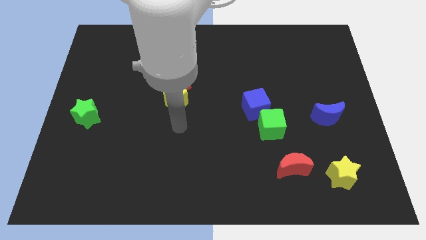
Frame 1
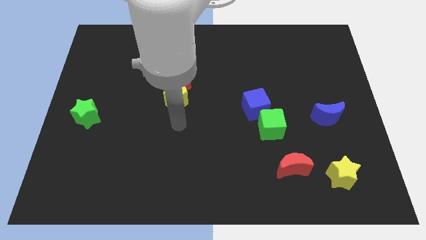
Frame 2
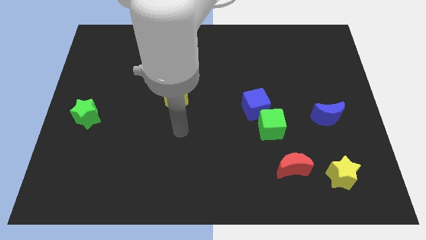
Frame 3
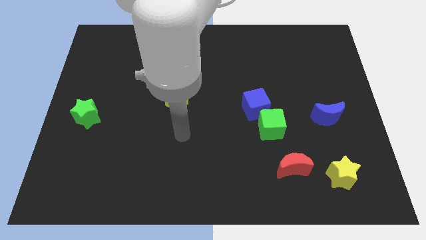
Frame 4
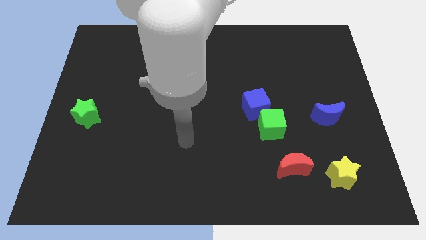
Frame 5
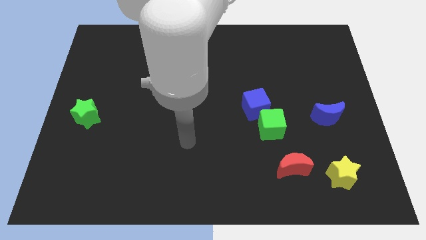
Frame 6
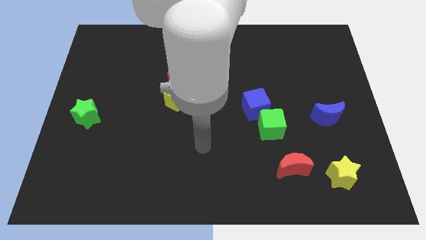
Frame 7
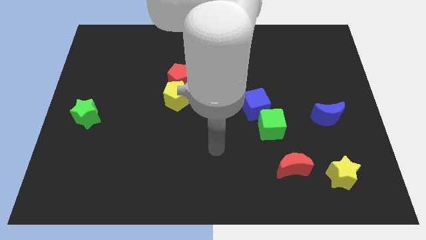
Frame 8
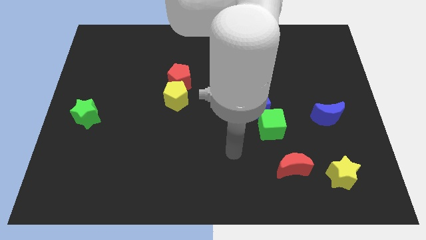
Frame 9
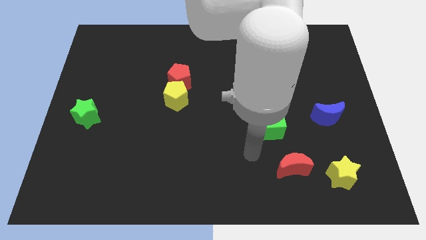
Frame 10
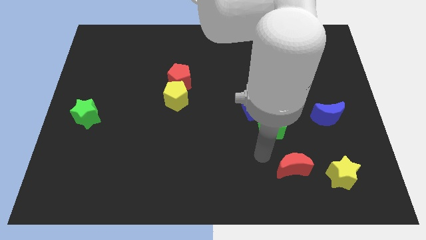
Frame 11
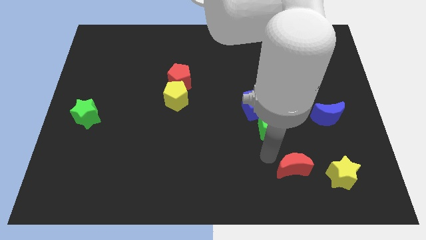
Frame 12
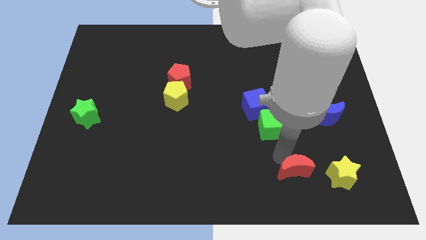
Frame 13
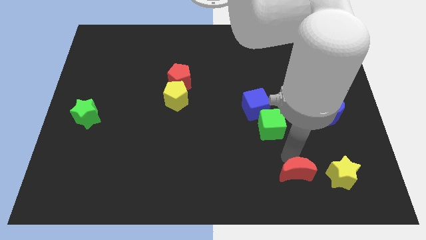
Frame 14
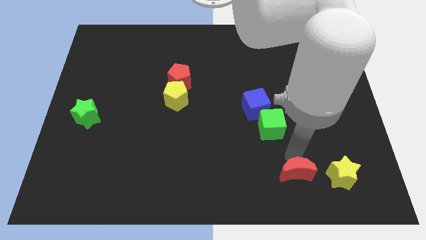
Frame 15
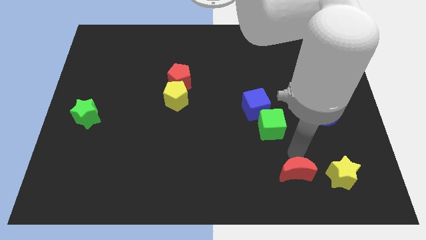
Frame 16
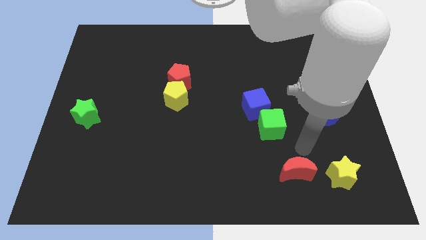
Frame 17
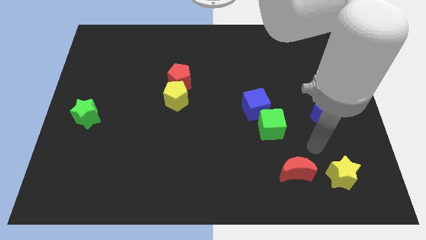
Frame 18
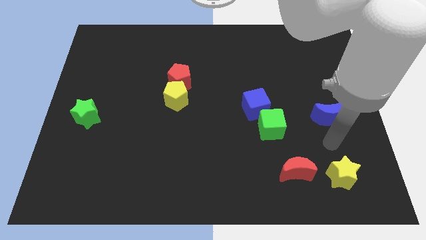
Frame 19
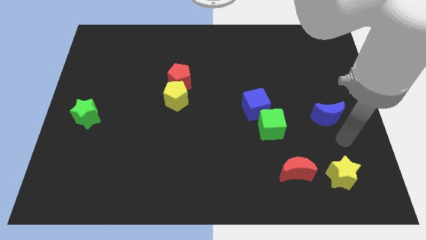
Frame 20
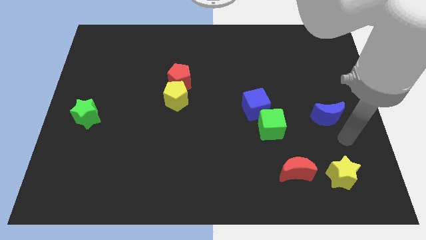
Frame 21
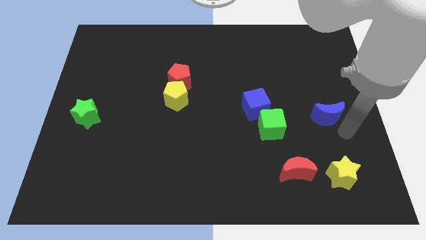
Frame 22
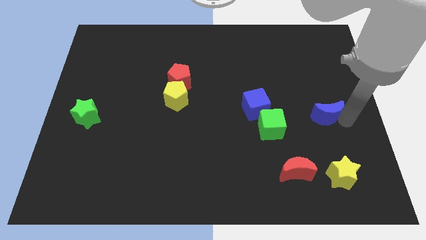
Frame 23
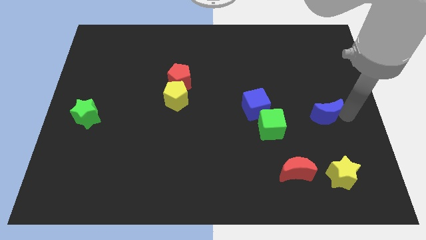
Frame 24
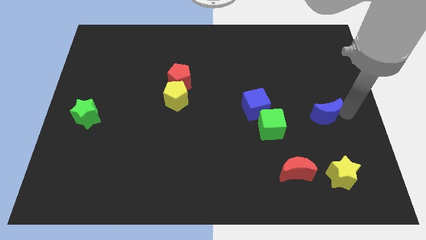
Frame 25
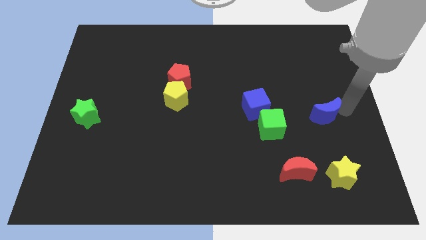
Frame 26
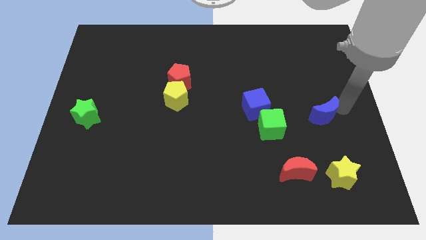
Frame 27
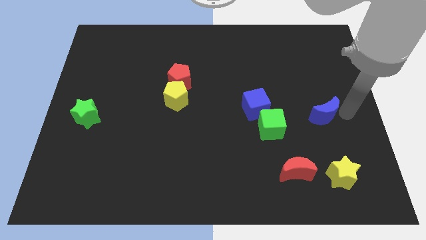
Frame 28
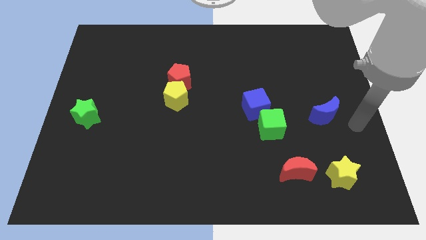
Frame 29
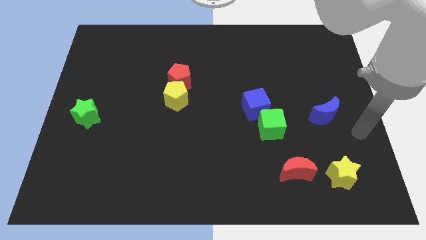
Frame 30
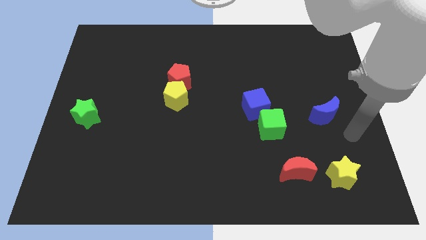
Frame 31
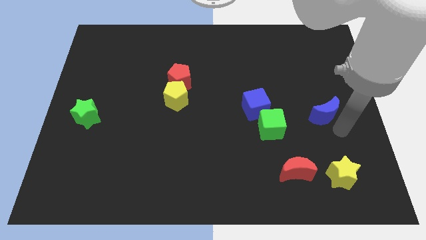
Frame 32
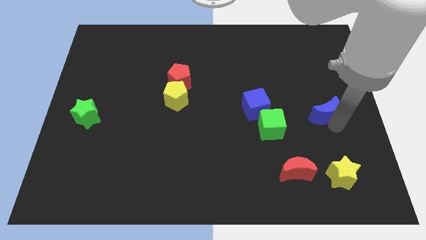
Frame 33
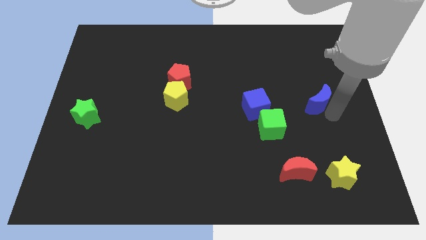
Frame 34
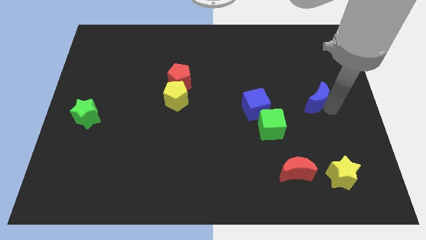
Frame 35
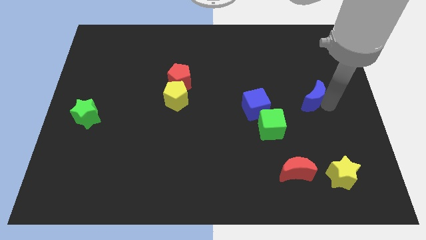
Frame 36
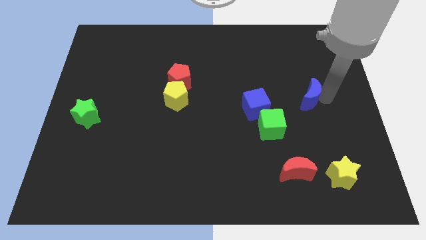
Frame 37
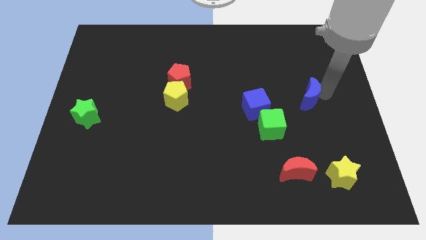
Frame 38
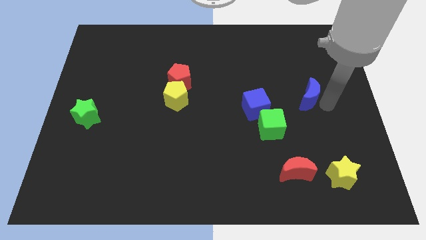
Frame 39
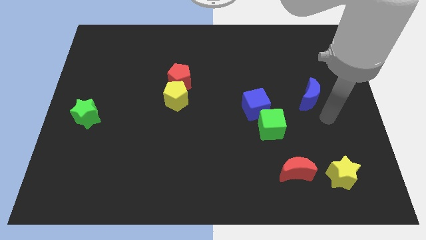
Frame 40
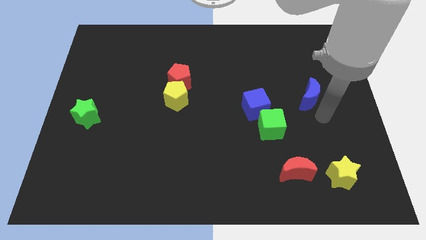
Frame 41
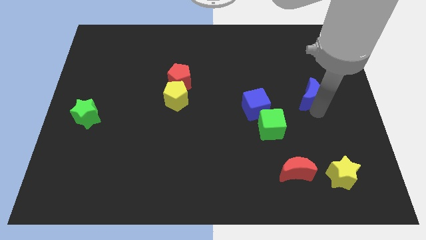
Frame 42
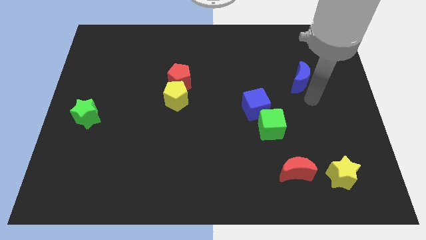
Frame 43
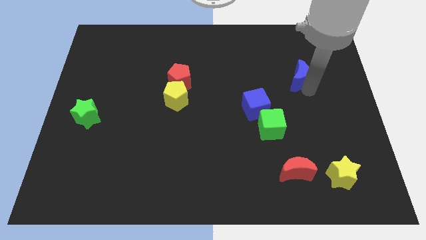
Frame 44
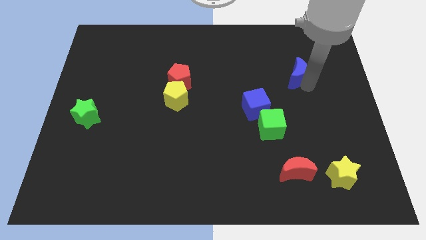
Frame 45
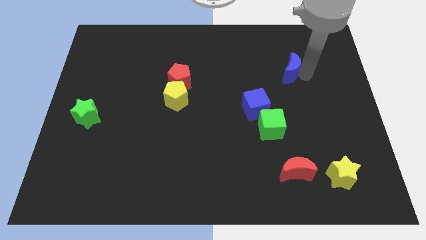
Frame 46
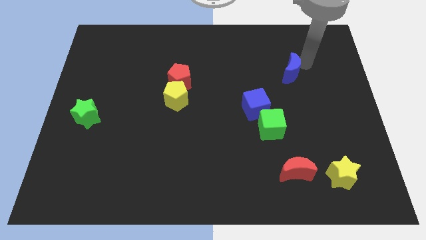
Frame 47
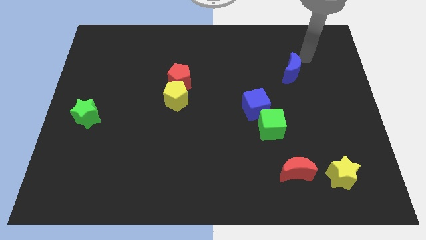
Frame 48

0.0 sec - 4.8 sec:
slide the blue moon diagonally top right to the blue cube

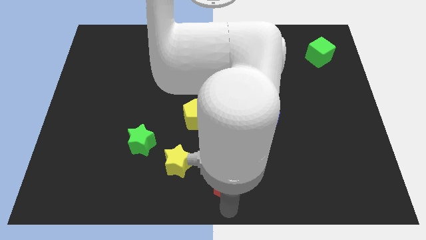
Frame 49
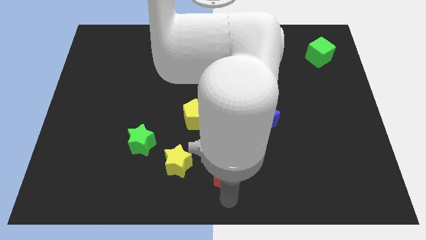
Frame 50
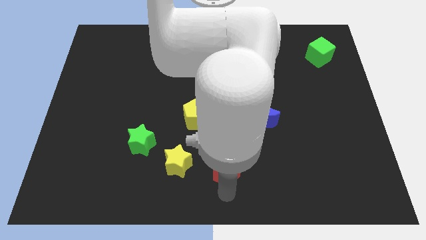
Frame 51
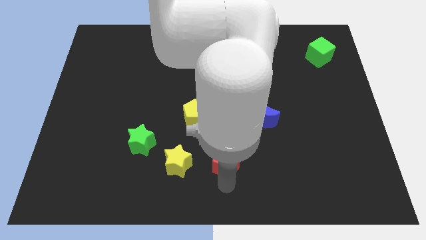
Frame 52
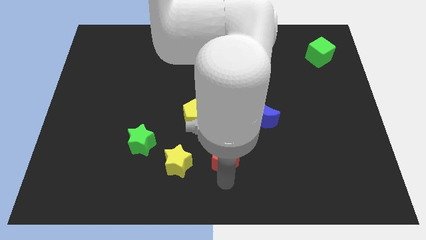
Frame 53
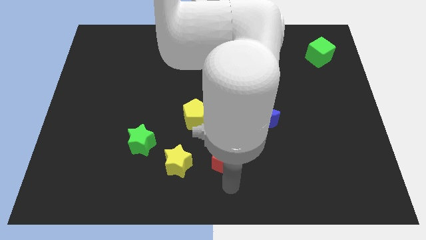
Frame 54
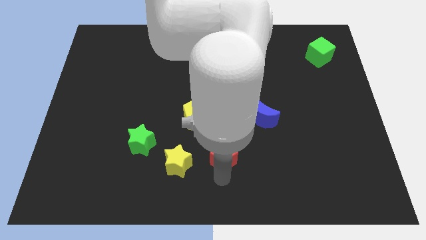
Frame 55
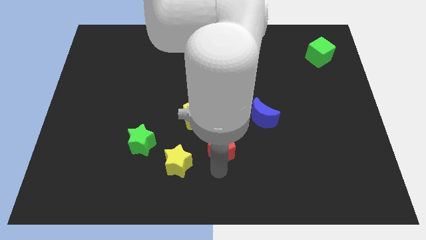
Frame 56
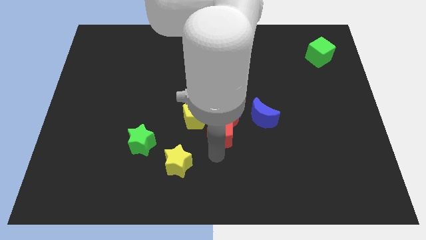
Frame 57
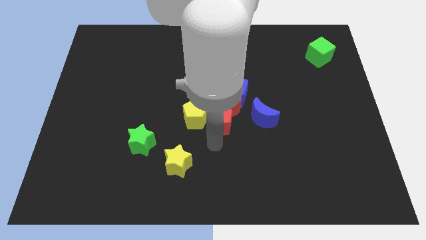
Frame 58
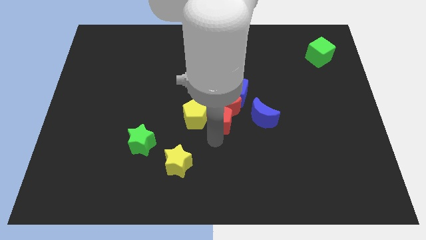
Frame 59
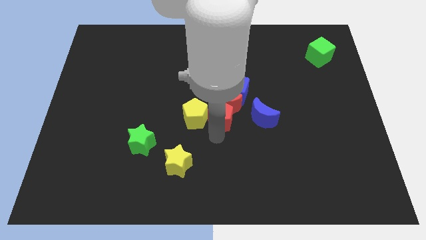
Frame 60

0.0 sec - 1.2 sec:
put the red pentagon to the right of the yellow pentagon

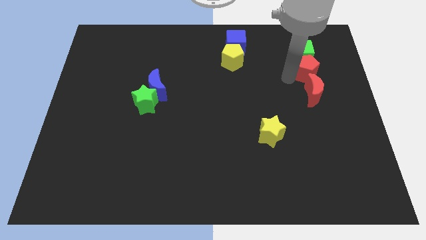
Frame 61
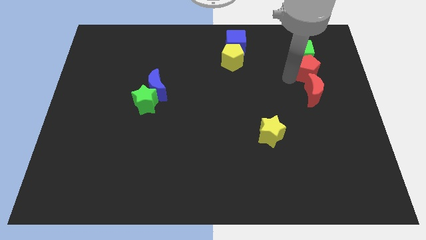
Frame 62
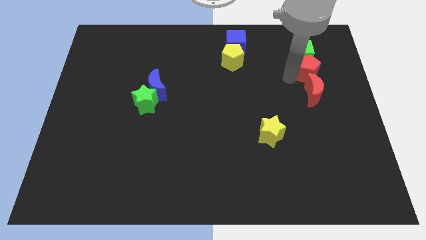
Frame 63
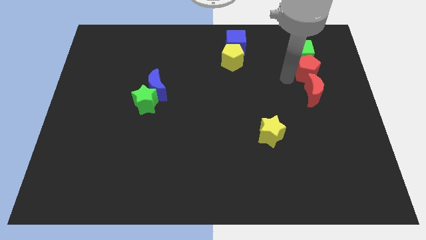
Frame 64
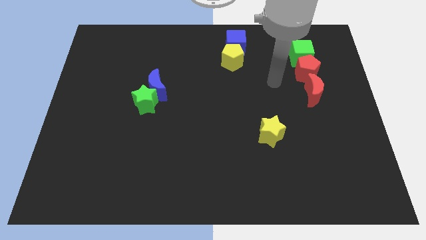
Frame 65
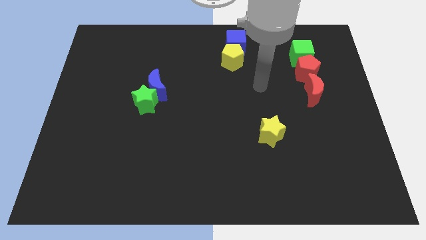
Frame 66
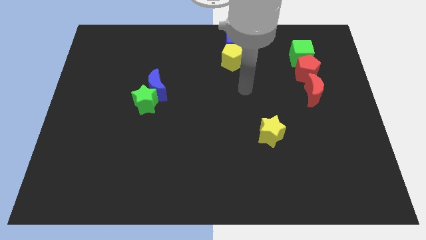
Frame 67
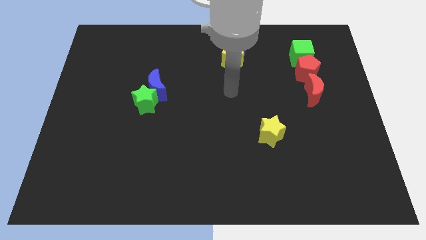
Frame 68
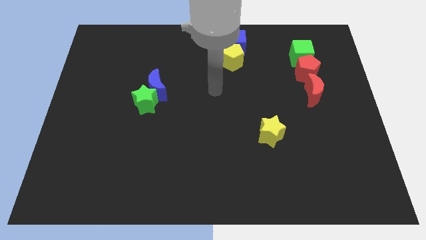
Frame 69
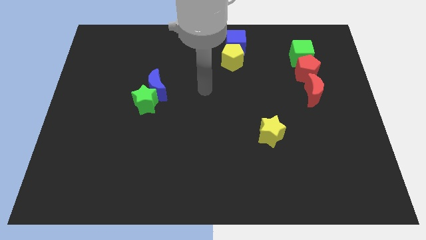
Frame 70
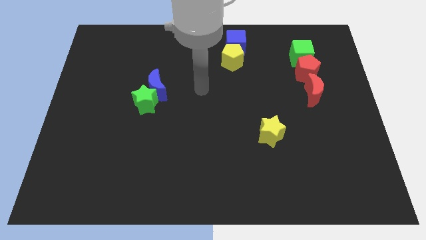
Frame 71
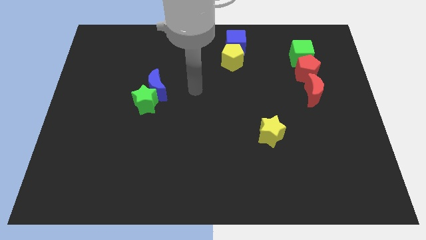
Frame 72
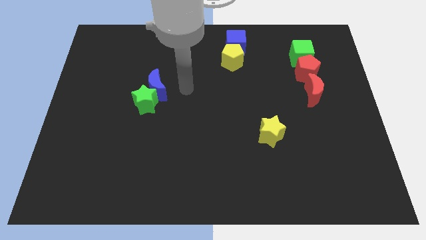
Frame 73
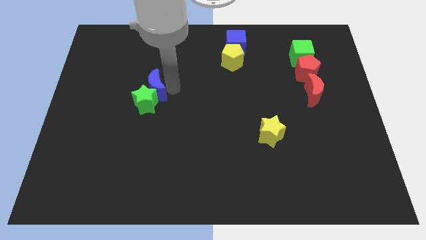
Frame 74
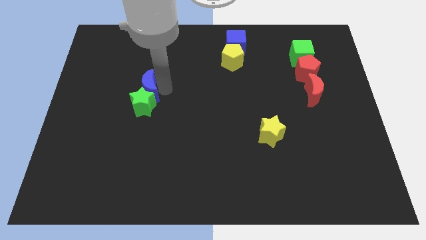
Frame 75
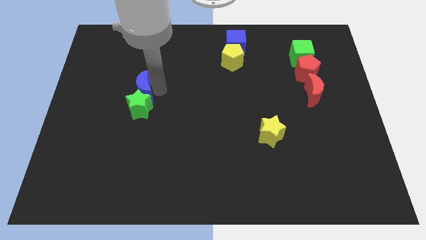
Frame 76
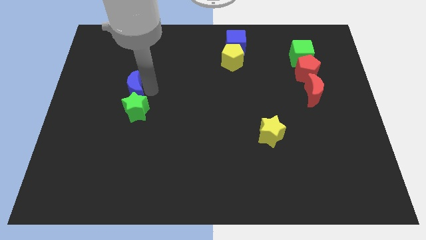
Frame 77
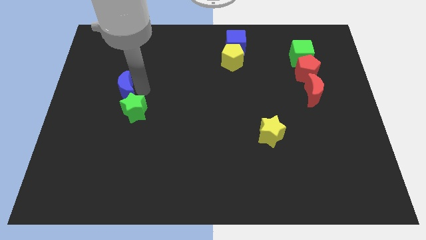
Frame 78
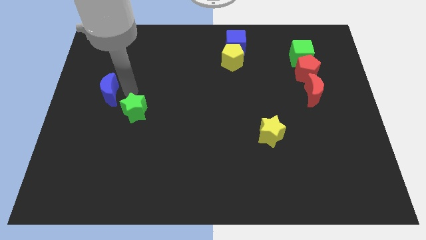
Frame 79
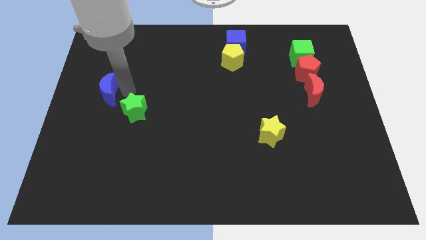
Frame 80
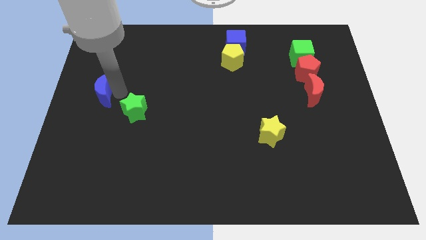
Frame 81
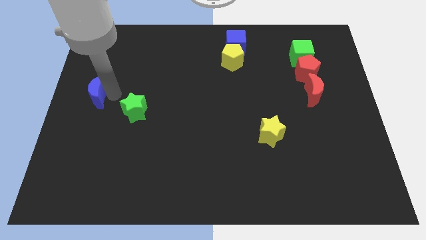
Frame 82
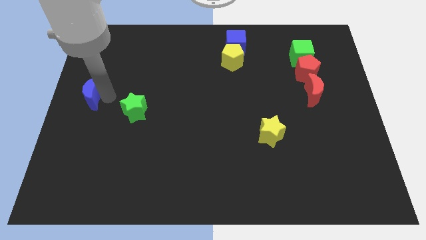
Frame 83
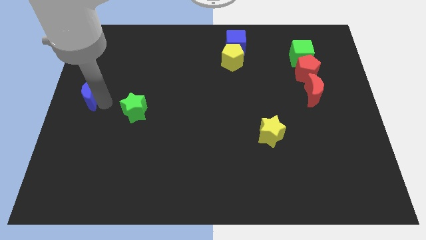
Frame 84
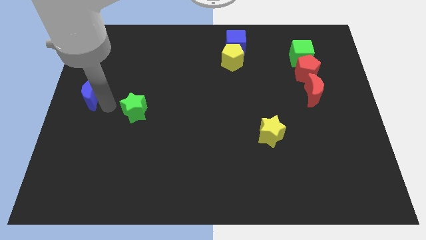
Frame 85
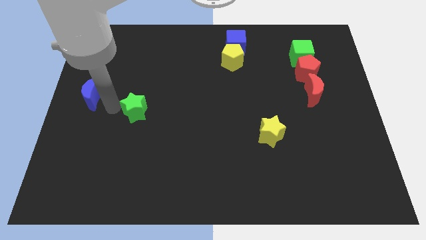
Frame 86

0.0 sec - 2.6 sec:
separate the blue crescent from the green star

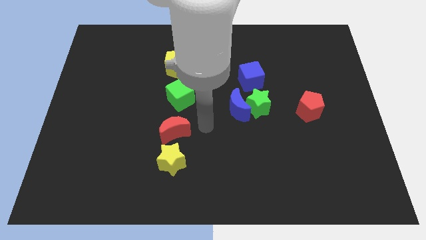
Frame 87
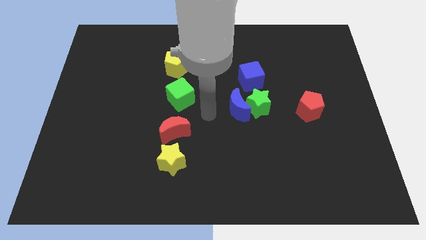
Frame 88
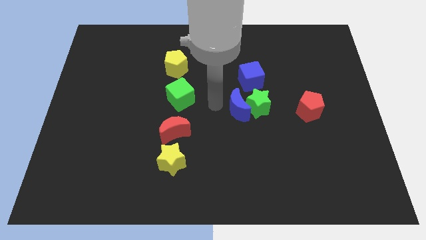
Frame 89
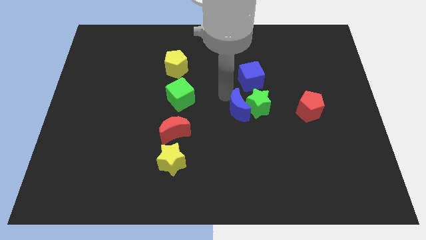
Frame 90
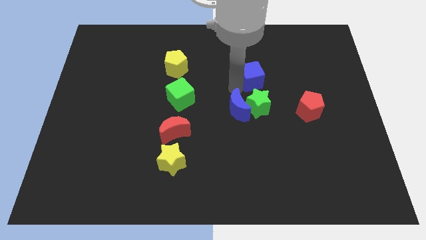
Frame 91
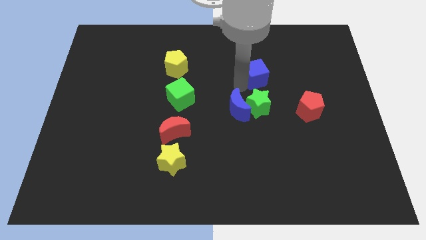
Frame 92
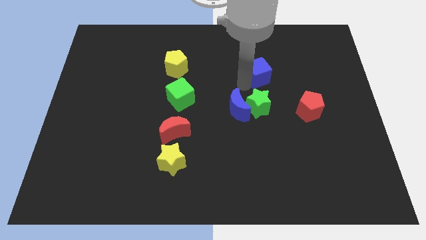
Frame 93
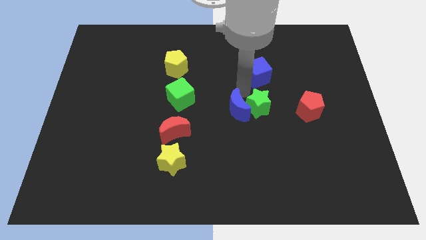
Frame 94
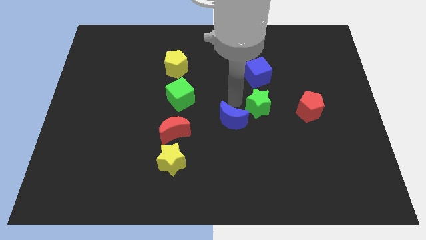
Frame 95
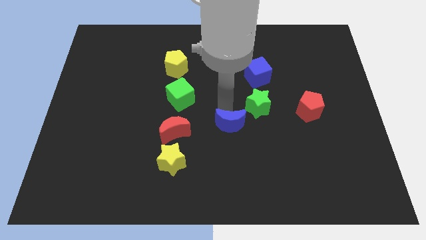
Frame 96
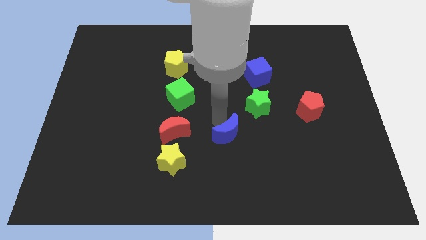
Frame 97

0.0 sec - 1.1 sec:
place blue moon to the right of red moon
